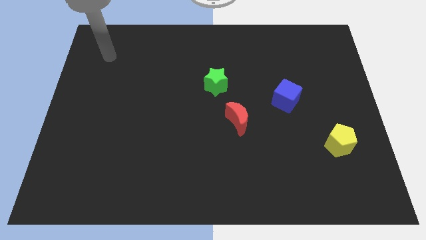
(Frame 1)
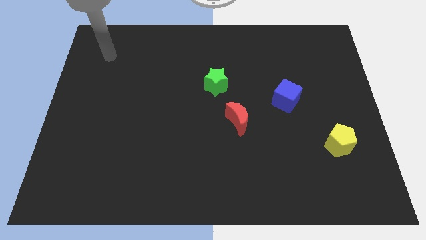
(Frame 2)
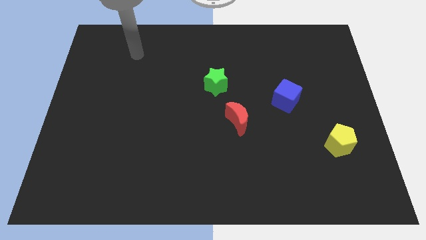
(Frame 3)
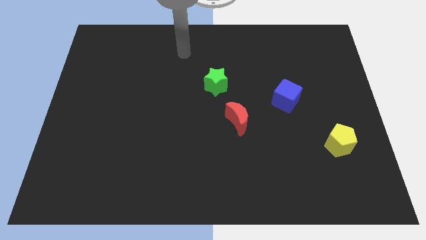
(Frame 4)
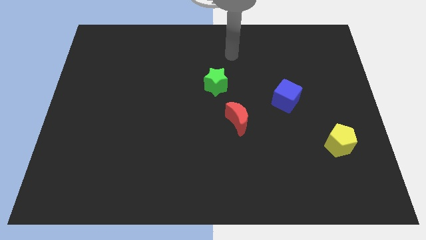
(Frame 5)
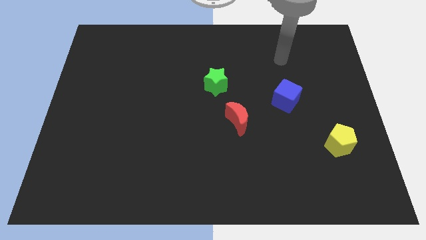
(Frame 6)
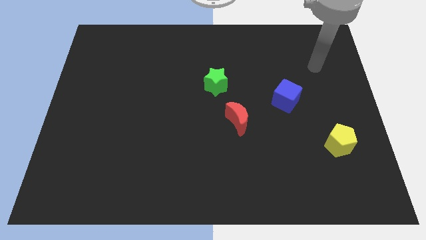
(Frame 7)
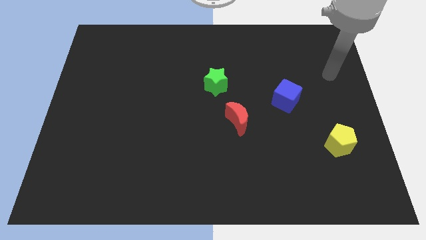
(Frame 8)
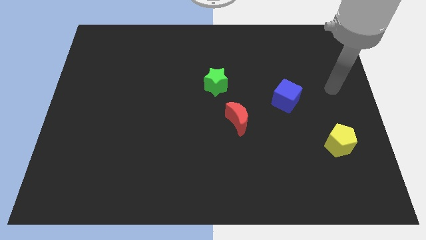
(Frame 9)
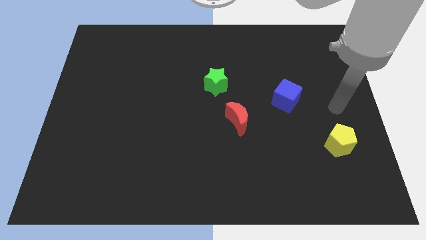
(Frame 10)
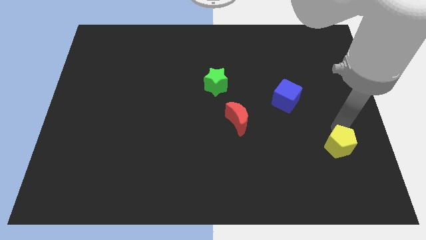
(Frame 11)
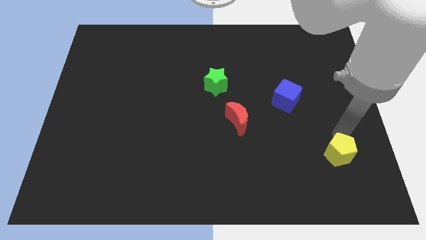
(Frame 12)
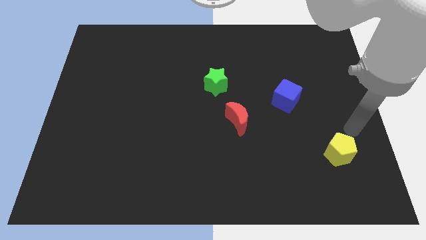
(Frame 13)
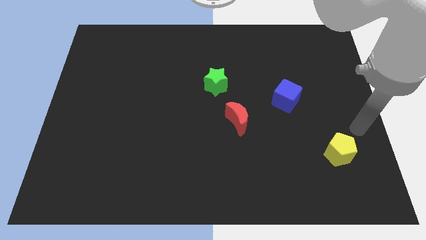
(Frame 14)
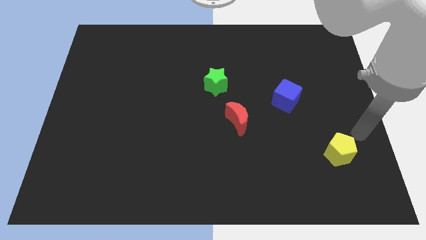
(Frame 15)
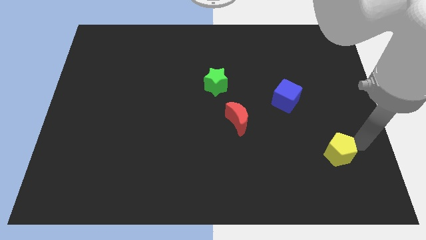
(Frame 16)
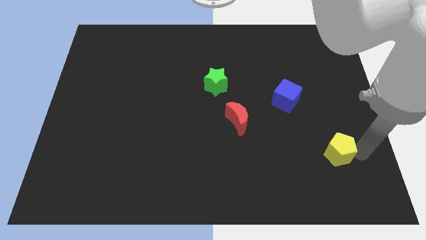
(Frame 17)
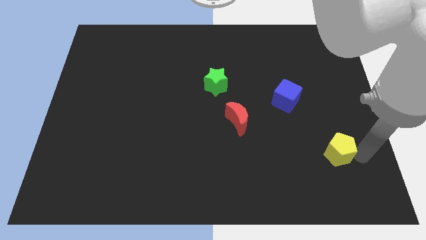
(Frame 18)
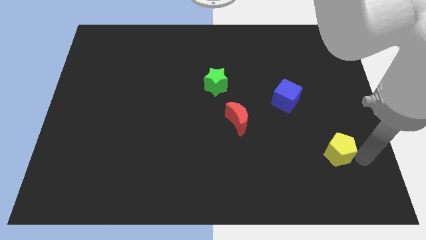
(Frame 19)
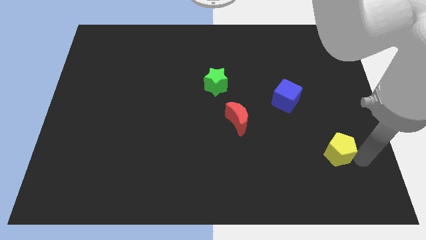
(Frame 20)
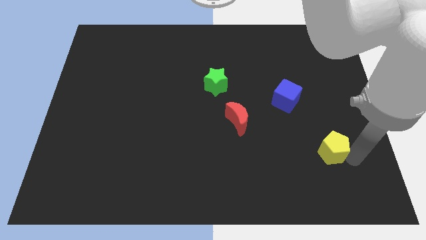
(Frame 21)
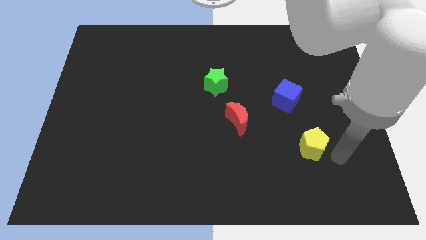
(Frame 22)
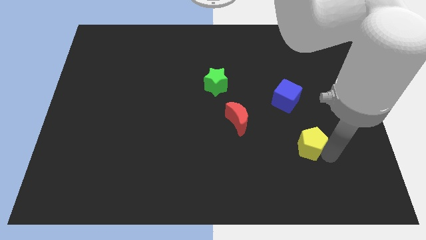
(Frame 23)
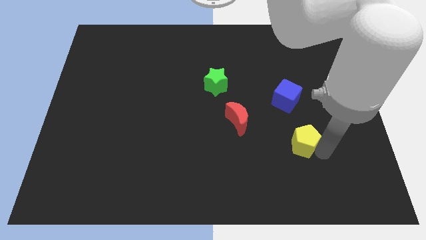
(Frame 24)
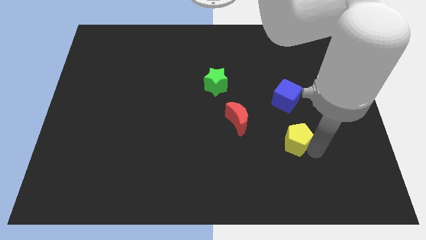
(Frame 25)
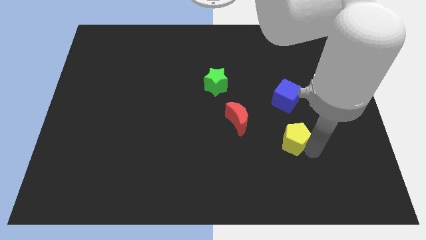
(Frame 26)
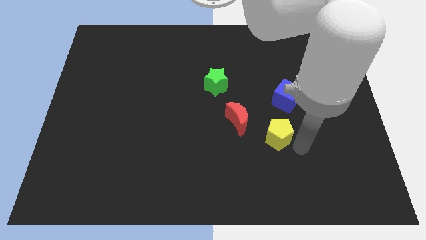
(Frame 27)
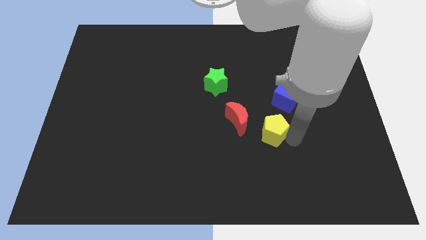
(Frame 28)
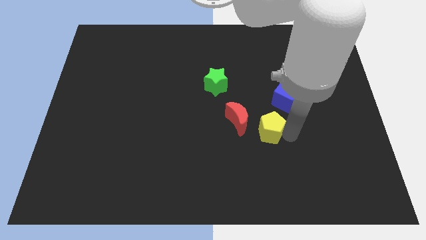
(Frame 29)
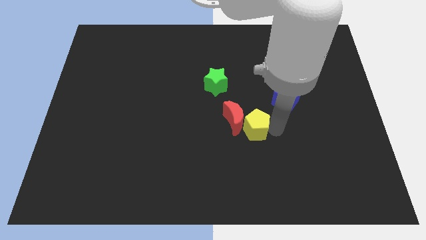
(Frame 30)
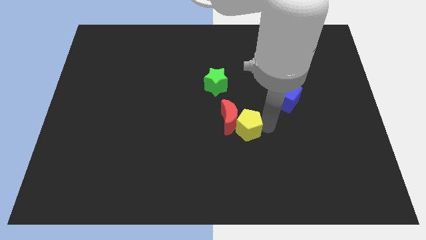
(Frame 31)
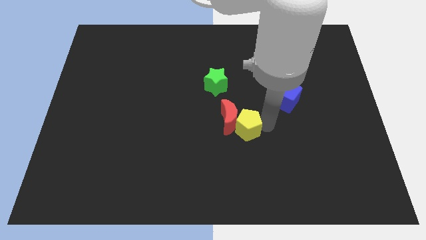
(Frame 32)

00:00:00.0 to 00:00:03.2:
move the yellow pentagon towards the moon

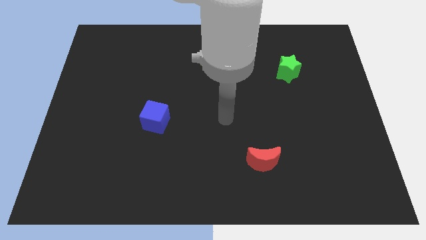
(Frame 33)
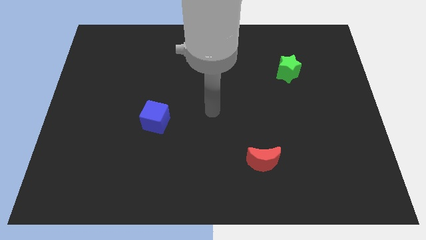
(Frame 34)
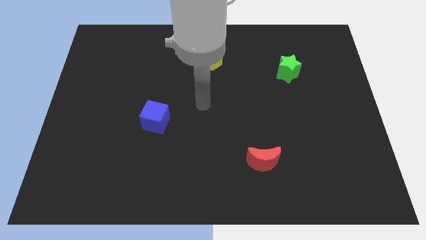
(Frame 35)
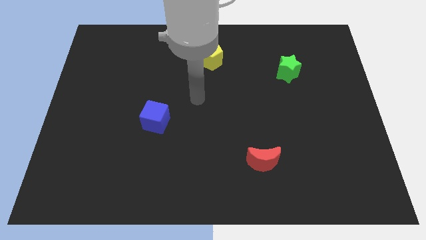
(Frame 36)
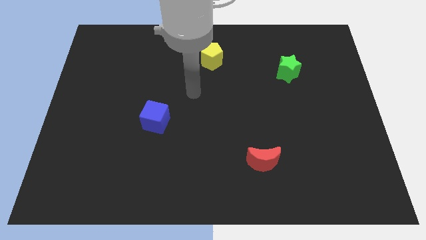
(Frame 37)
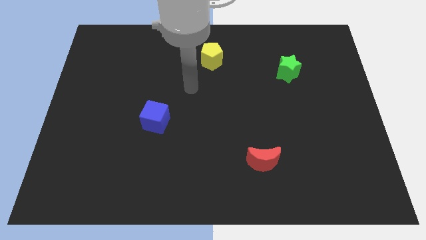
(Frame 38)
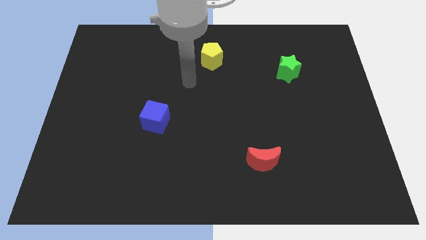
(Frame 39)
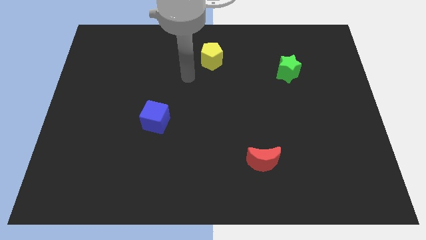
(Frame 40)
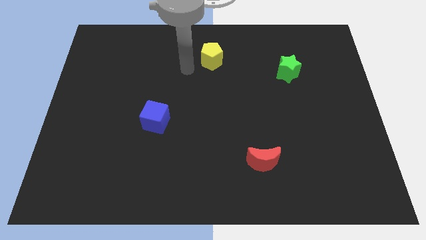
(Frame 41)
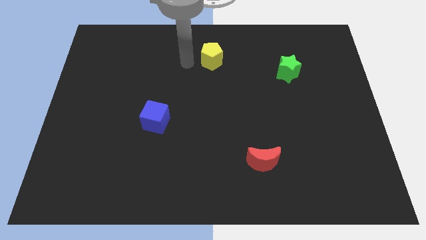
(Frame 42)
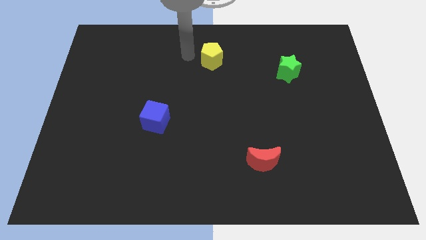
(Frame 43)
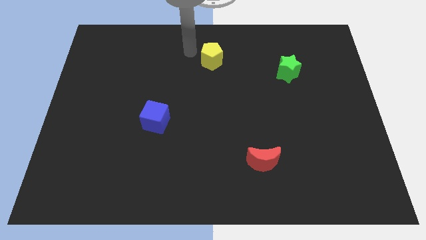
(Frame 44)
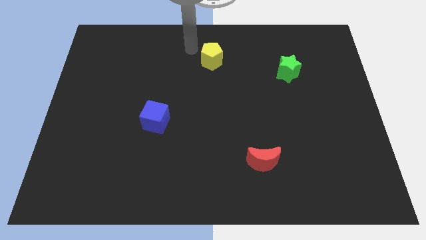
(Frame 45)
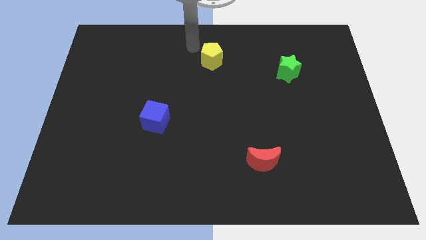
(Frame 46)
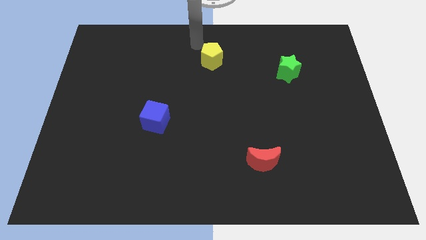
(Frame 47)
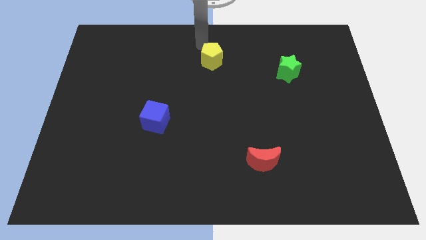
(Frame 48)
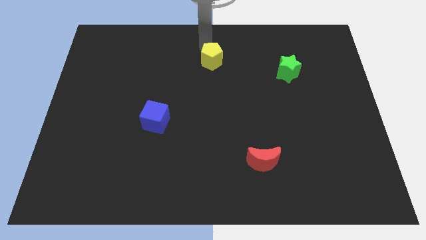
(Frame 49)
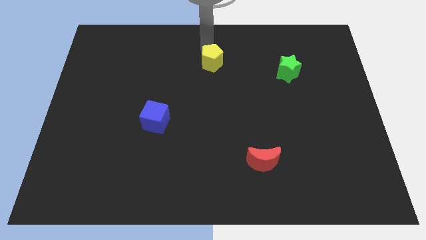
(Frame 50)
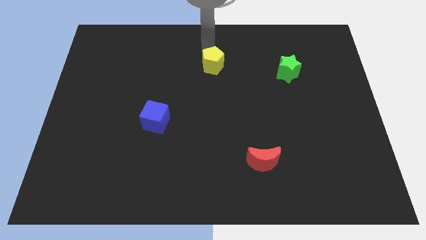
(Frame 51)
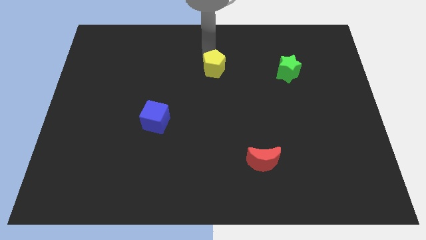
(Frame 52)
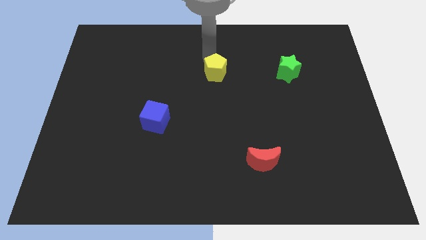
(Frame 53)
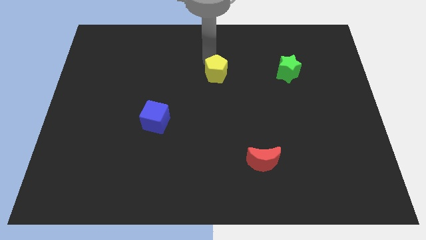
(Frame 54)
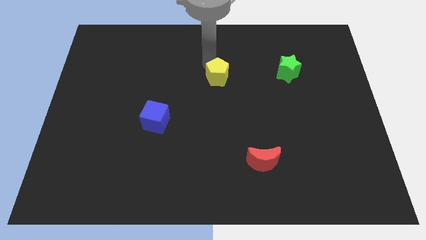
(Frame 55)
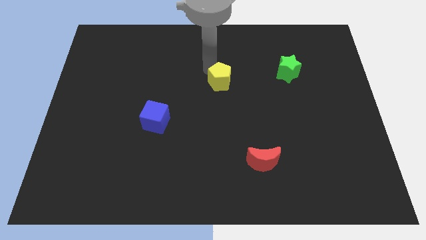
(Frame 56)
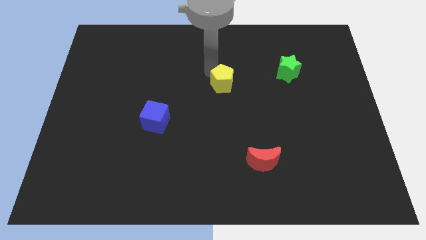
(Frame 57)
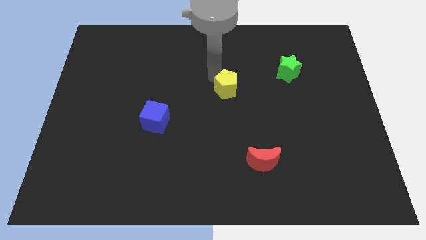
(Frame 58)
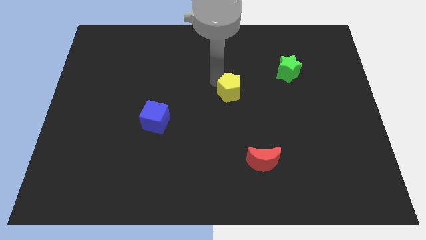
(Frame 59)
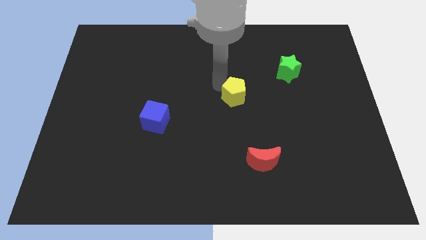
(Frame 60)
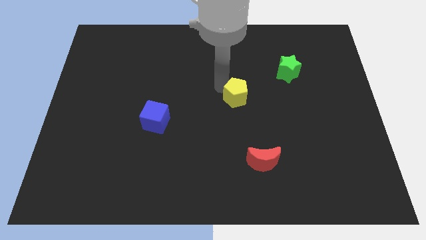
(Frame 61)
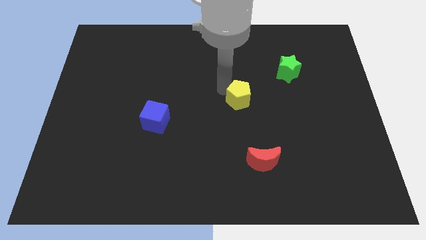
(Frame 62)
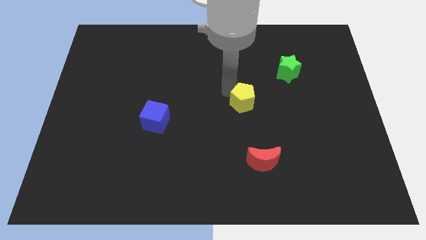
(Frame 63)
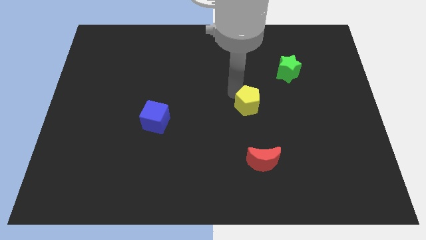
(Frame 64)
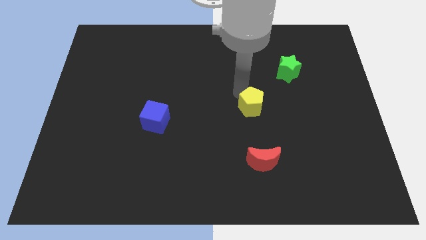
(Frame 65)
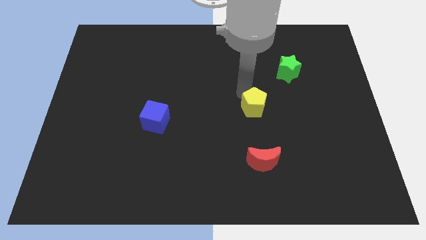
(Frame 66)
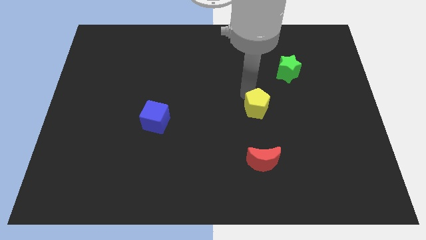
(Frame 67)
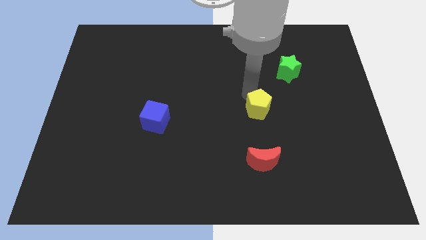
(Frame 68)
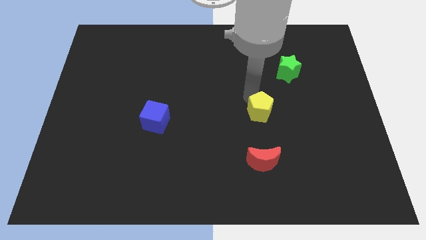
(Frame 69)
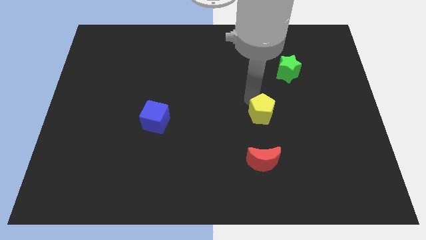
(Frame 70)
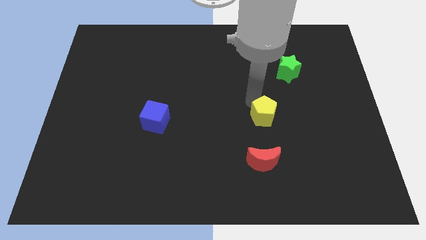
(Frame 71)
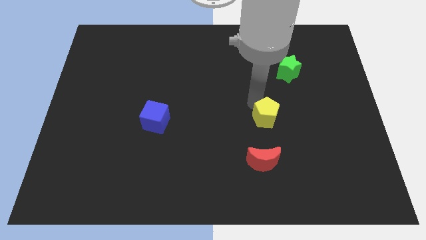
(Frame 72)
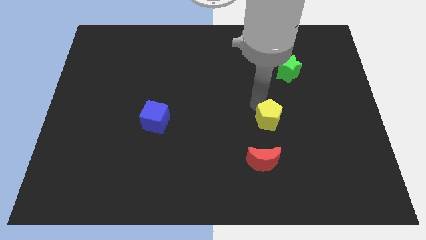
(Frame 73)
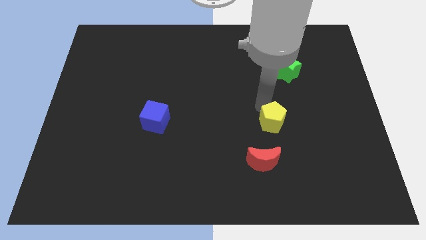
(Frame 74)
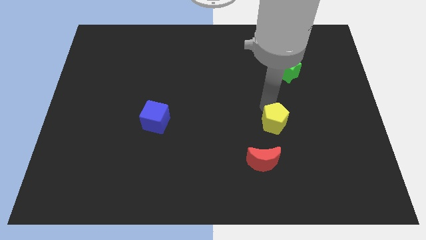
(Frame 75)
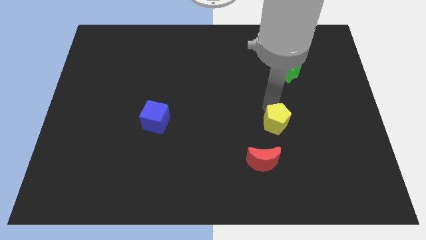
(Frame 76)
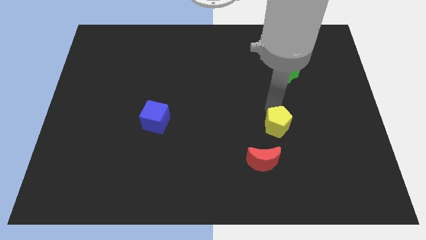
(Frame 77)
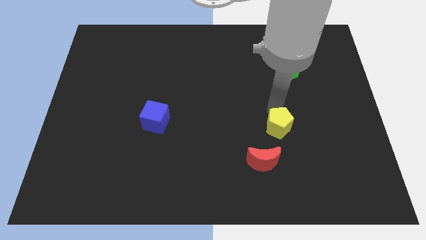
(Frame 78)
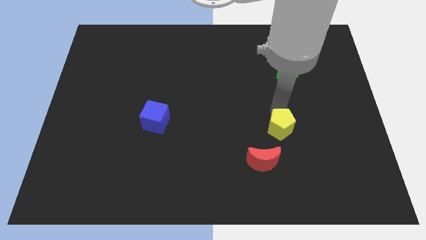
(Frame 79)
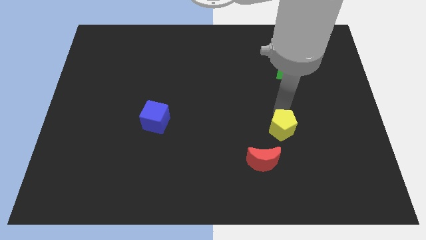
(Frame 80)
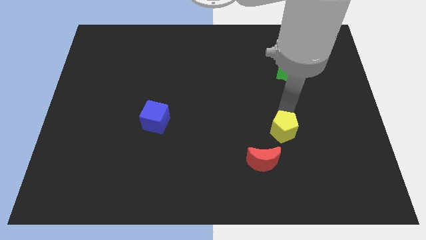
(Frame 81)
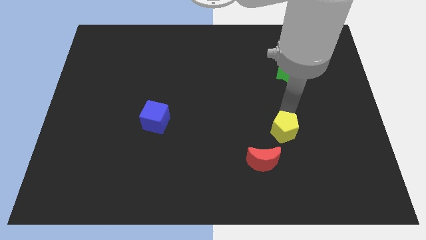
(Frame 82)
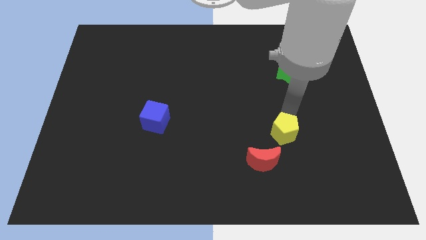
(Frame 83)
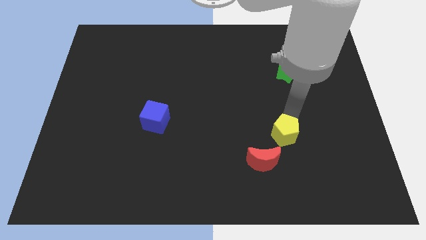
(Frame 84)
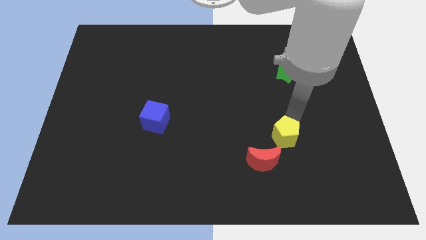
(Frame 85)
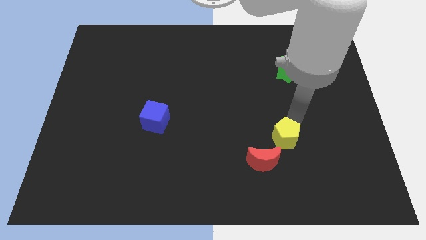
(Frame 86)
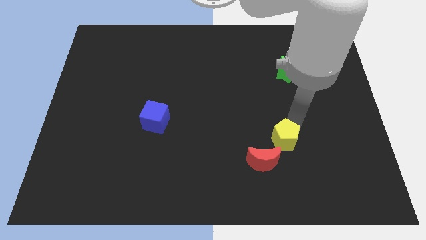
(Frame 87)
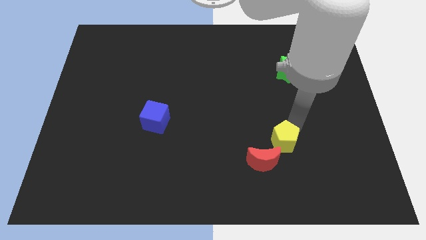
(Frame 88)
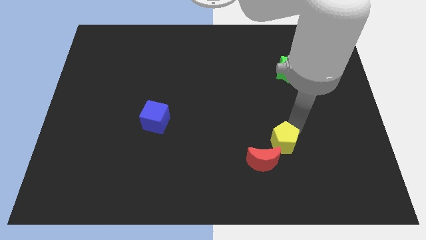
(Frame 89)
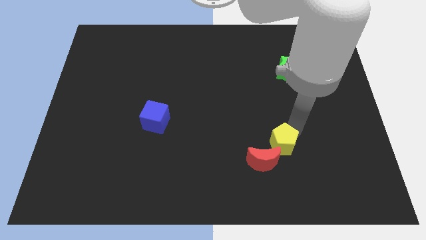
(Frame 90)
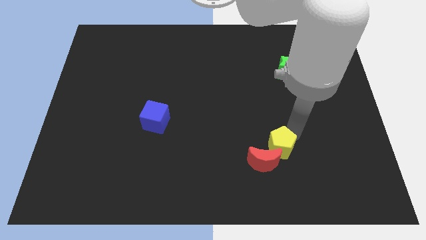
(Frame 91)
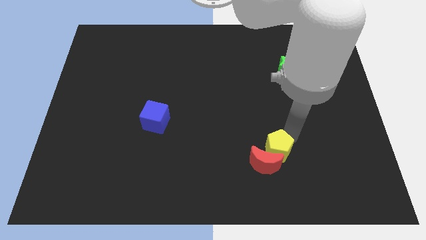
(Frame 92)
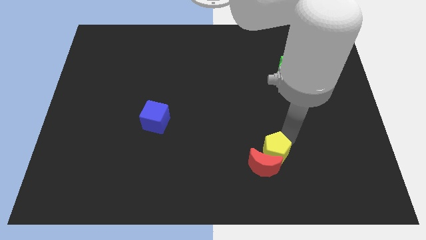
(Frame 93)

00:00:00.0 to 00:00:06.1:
put the pentagon towards the red block
